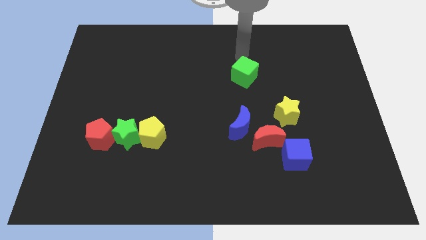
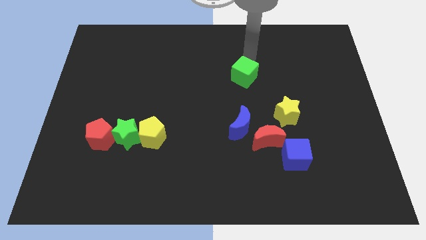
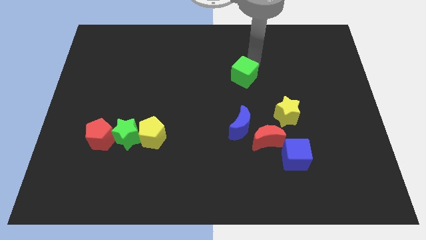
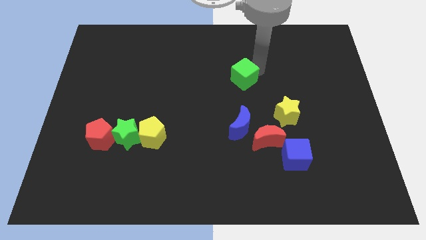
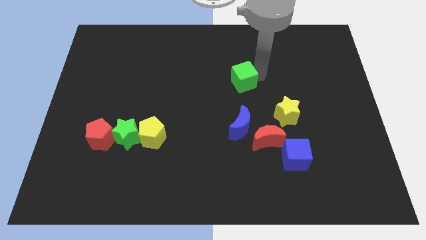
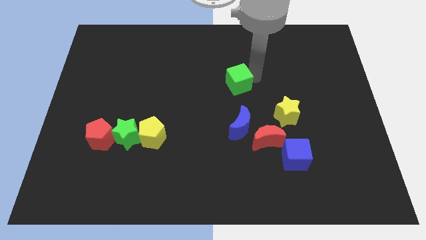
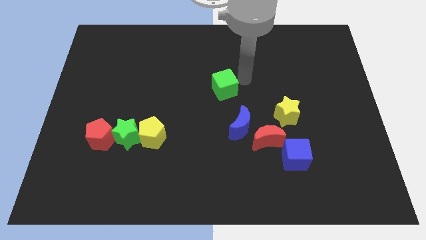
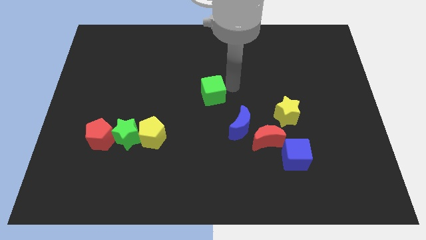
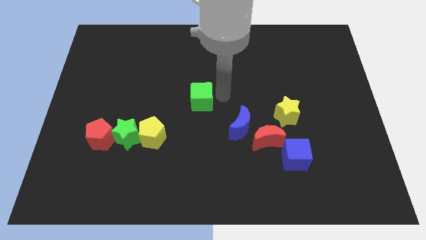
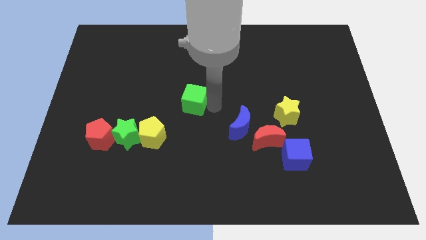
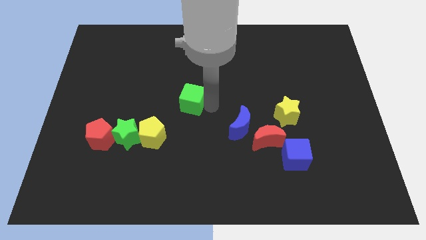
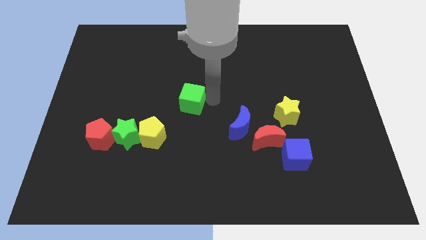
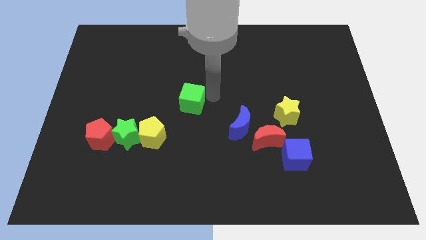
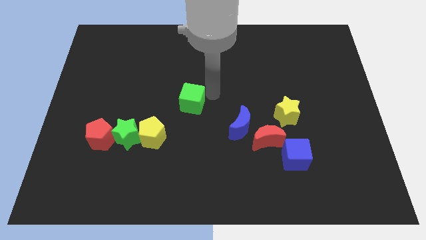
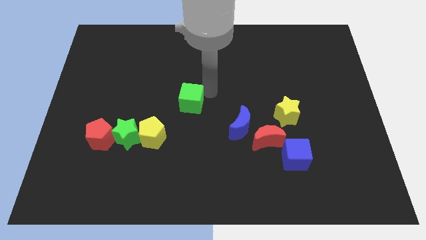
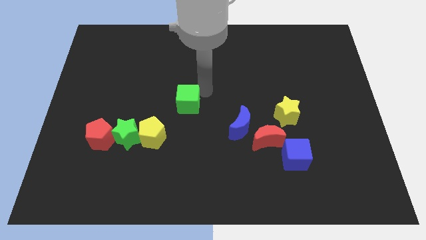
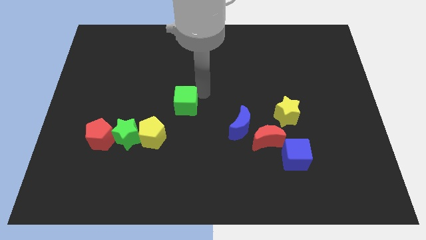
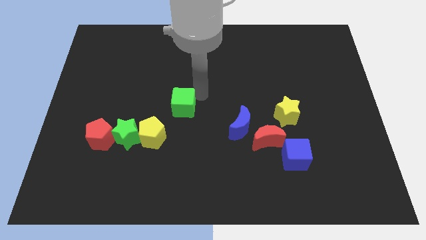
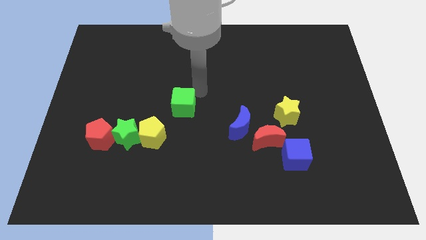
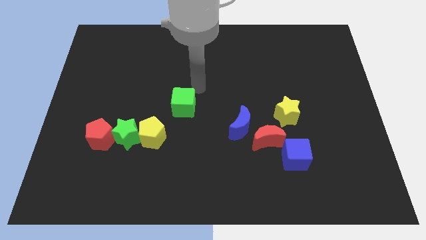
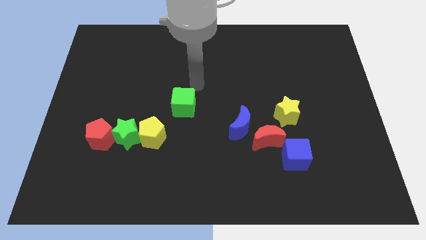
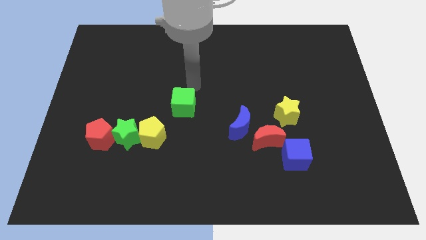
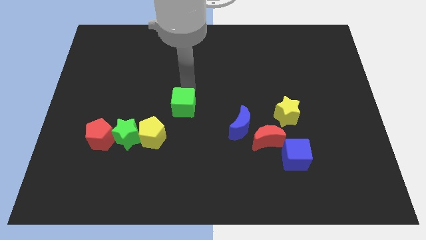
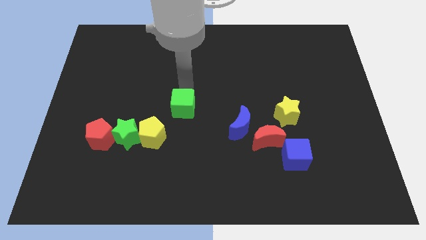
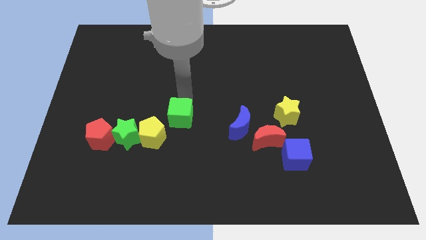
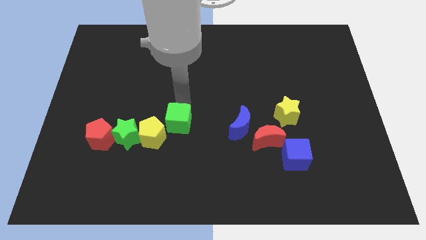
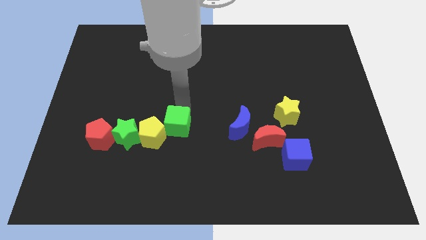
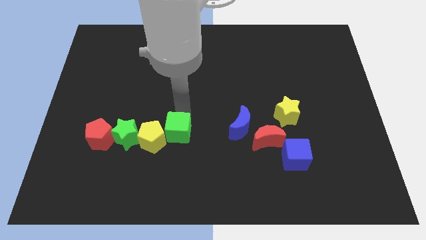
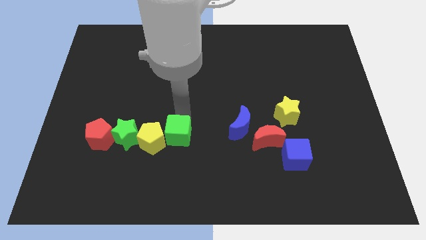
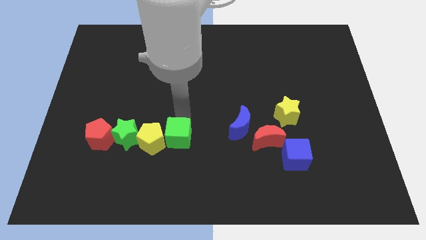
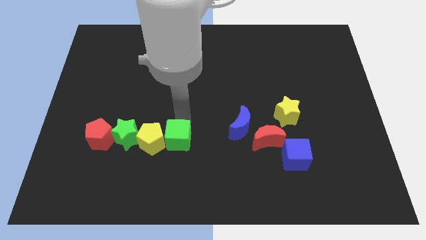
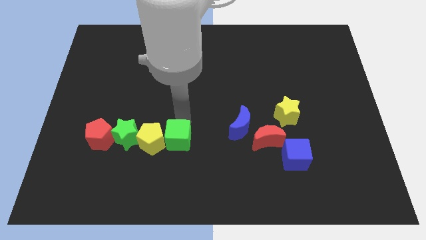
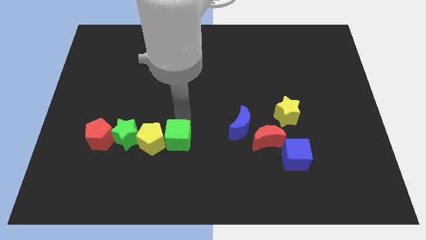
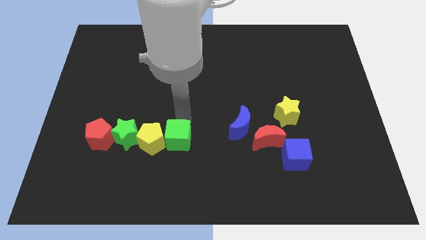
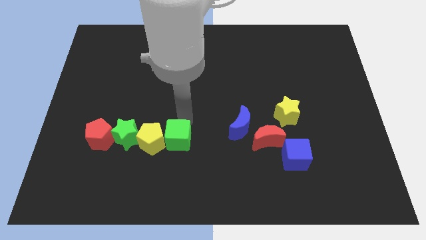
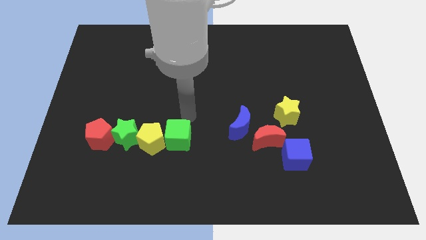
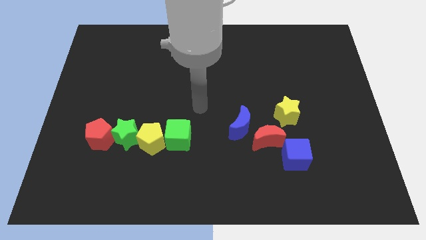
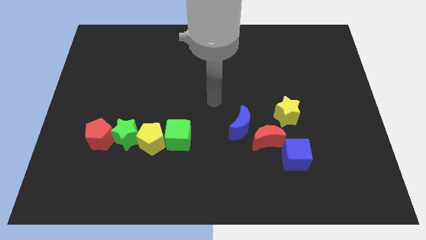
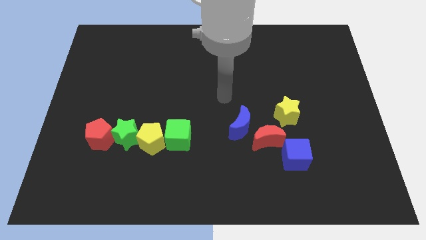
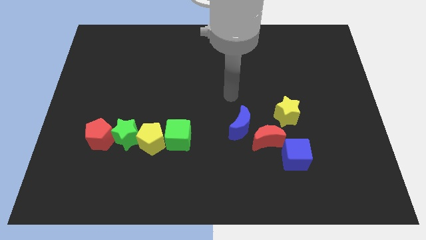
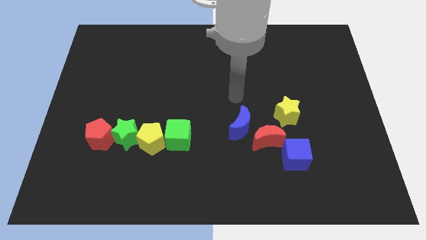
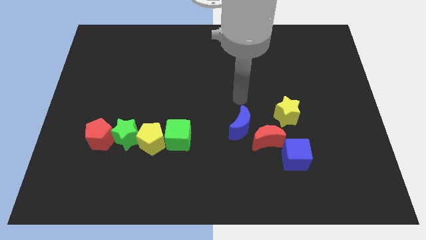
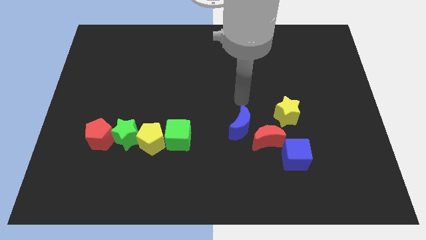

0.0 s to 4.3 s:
place the green cube parallel right to the yellow pentagon

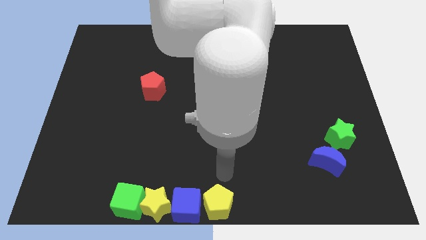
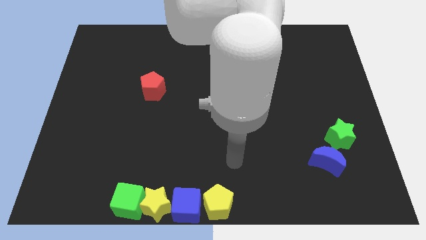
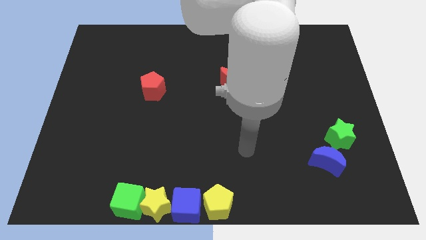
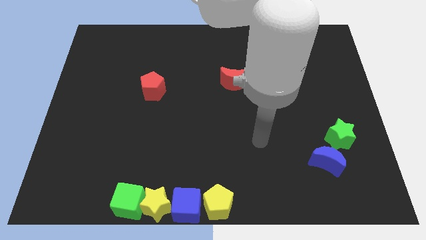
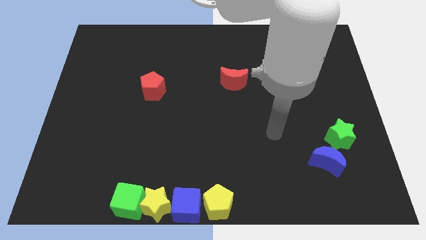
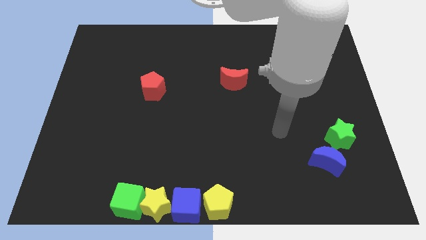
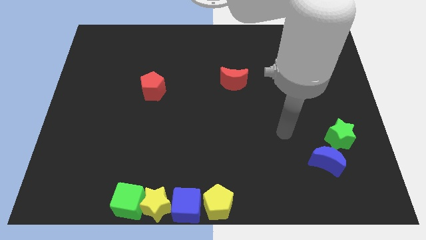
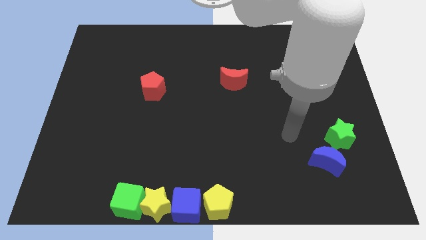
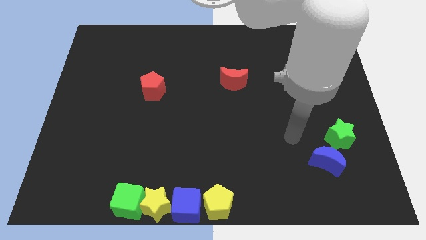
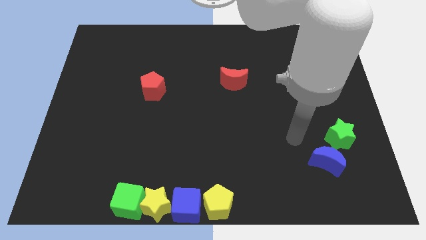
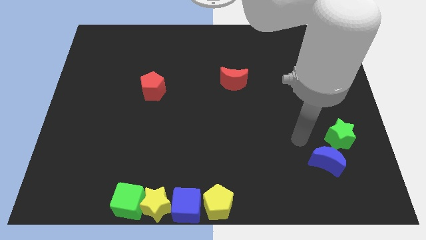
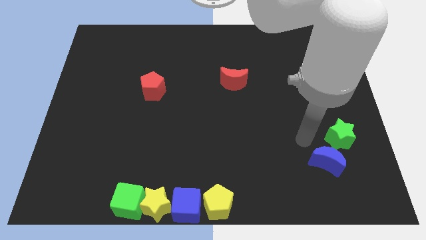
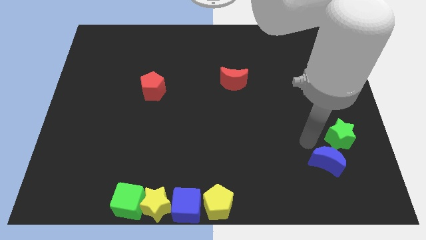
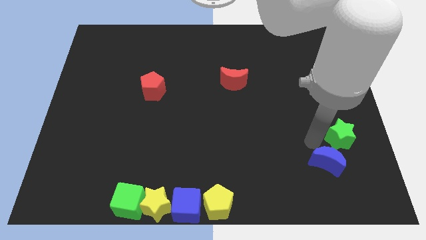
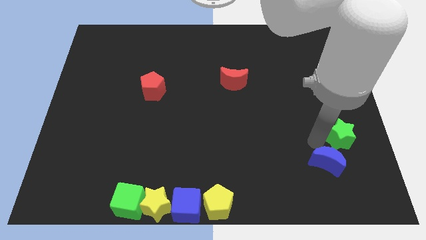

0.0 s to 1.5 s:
point the arm to the top left of the blue moon

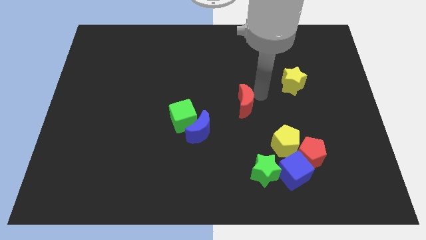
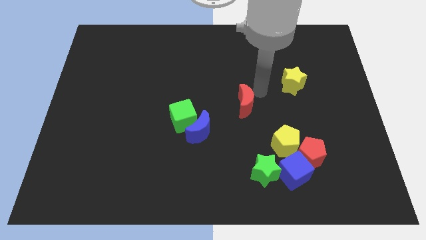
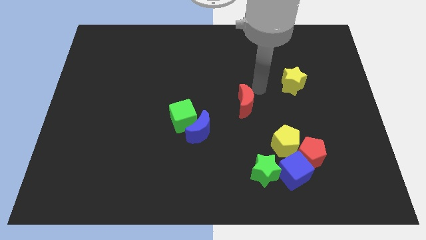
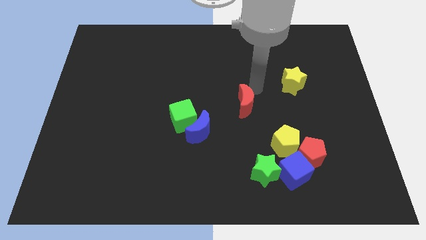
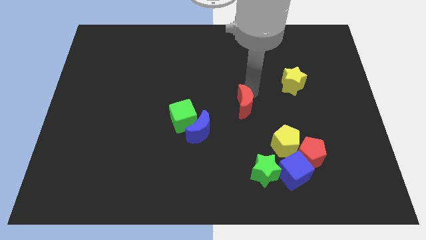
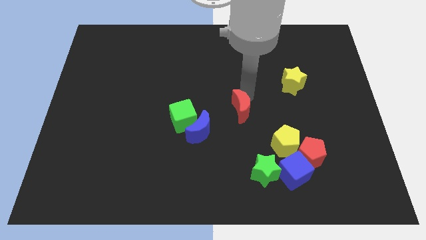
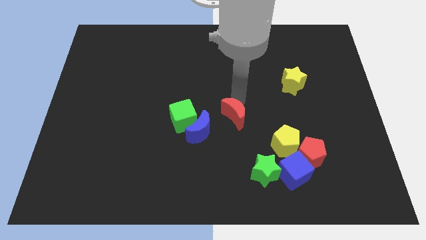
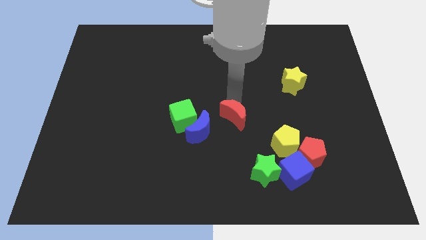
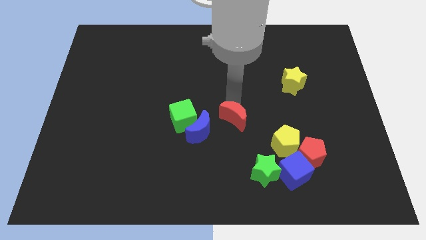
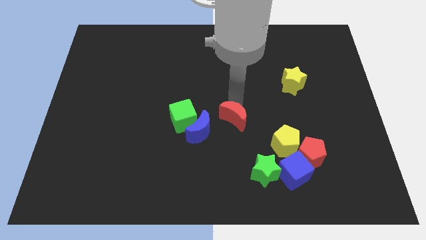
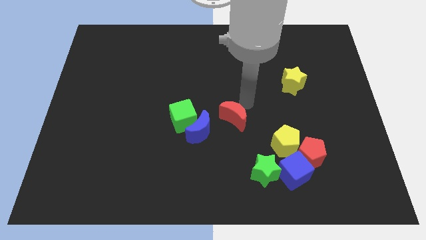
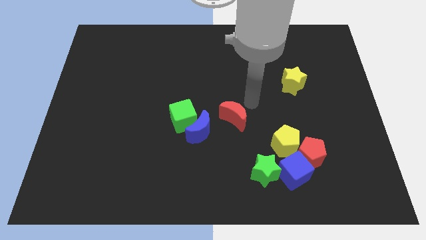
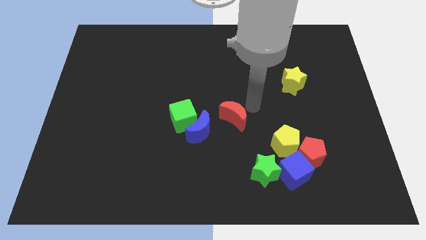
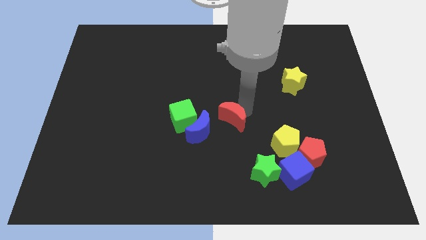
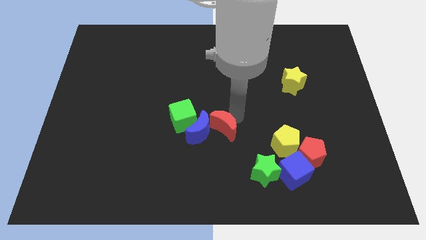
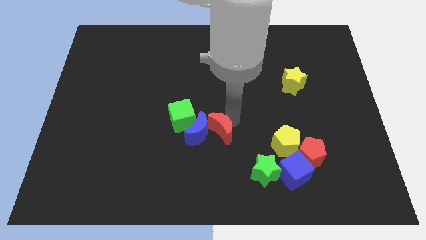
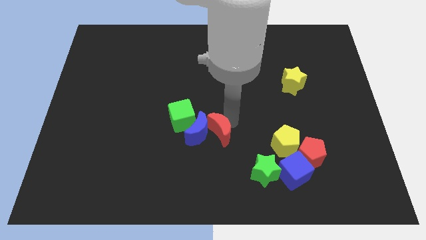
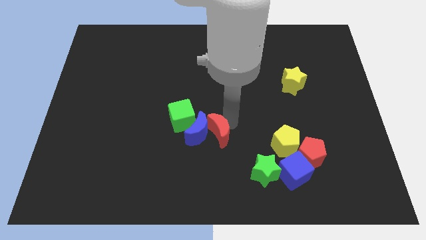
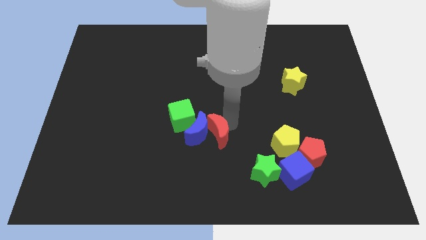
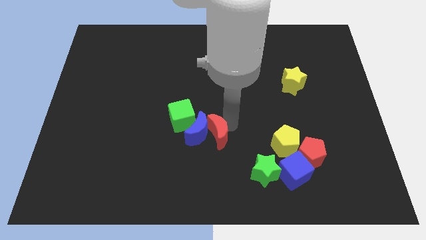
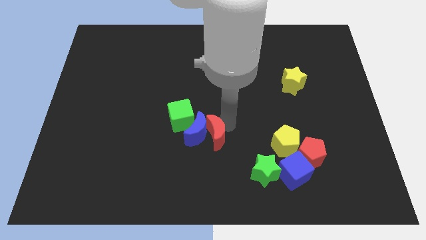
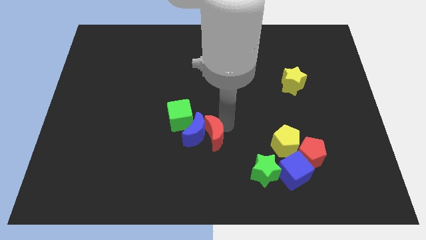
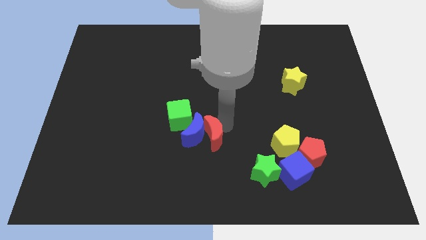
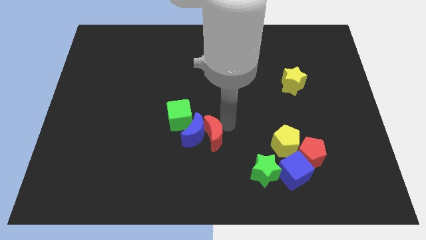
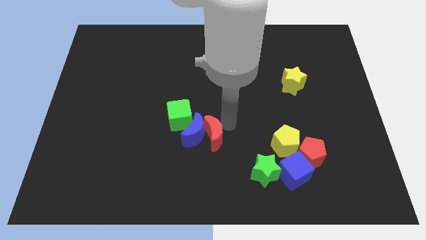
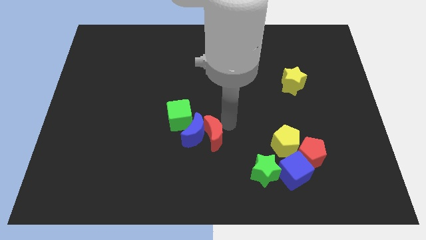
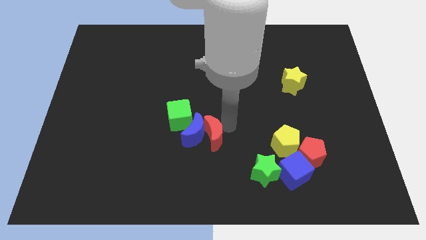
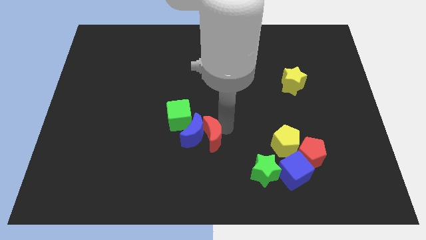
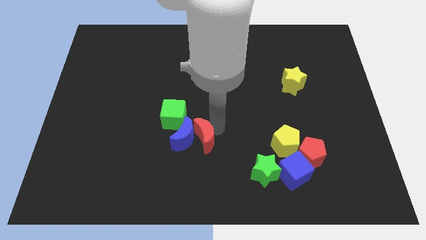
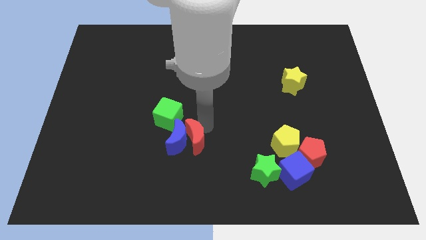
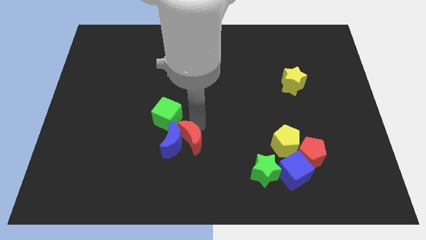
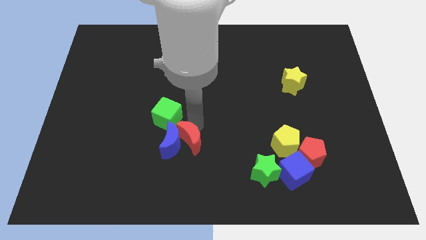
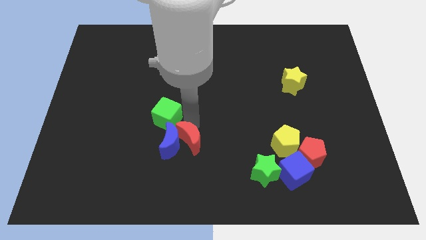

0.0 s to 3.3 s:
push the red moon into group of blocks
